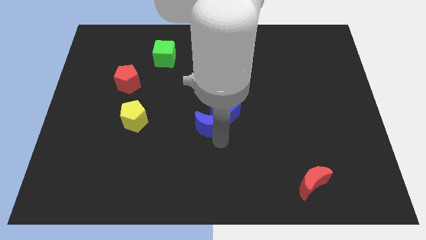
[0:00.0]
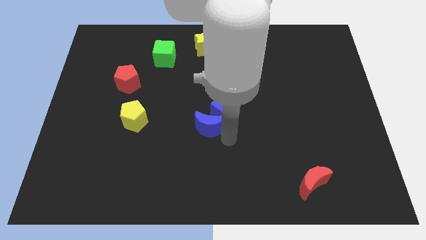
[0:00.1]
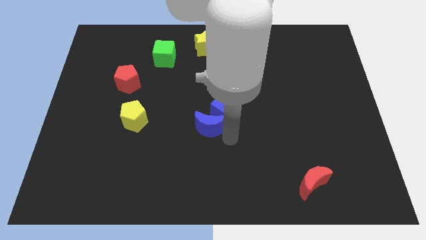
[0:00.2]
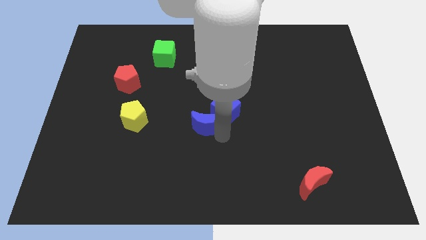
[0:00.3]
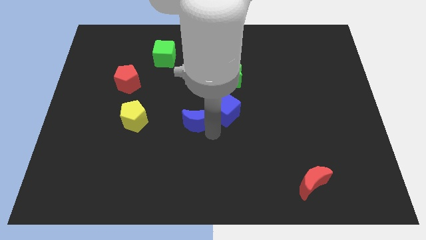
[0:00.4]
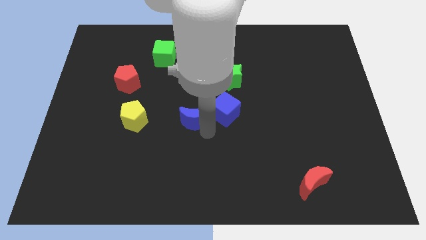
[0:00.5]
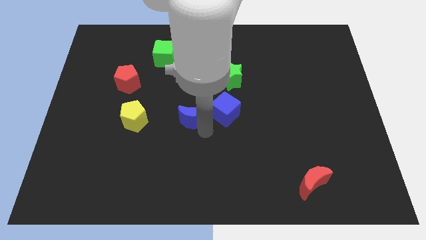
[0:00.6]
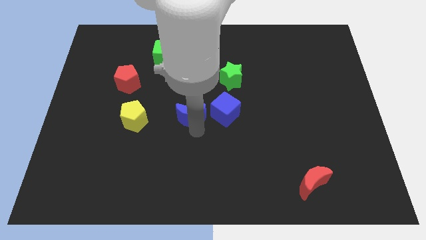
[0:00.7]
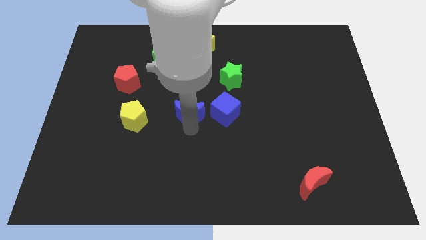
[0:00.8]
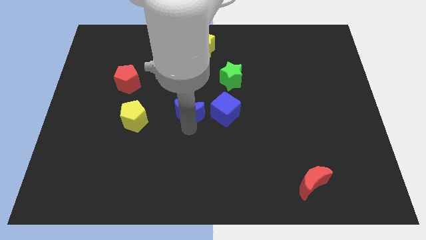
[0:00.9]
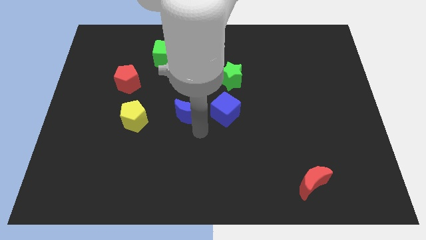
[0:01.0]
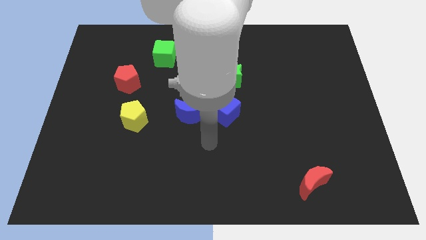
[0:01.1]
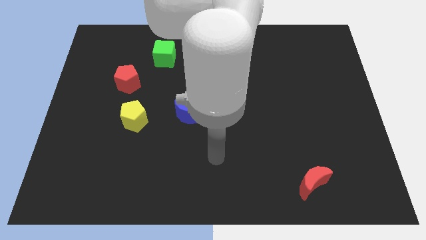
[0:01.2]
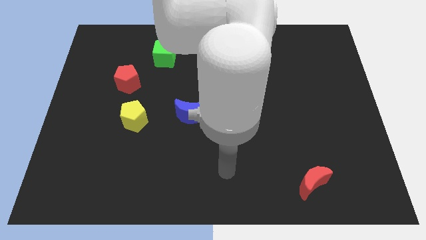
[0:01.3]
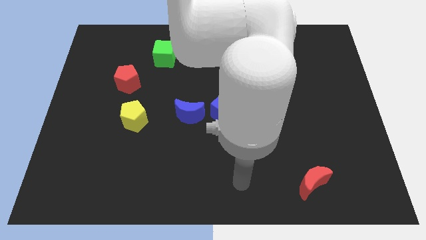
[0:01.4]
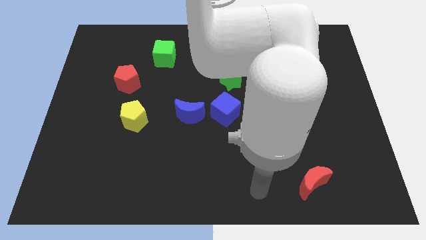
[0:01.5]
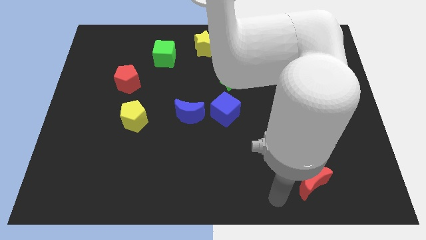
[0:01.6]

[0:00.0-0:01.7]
drag the blue moon left to the blue cube

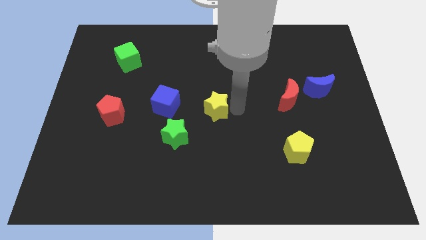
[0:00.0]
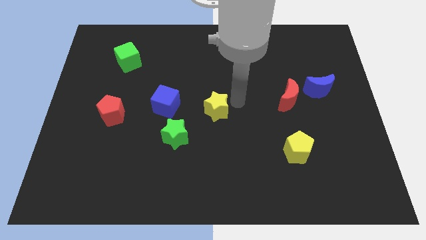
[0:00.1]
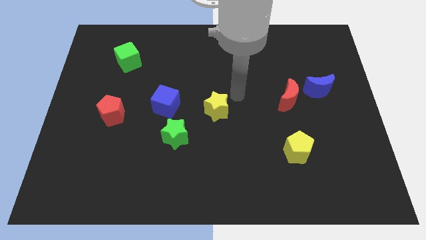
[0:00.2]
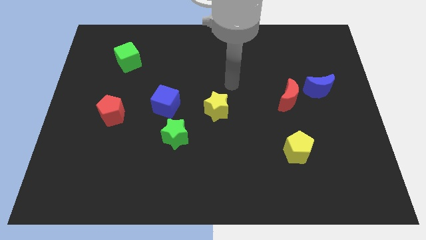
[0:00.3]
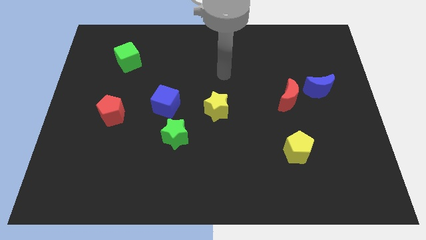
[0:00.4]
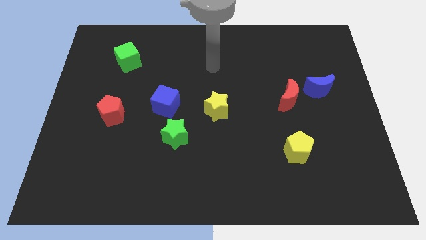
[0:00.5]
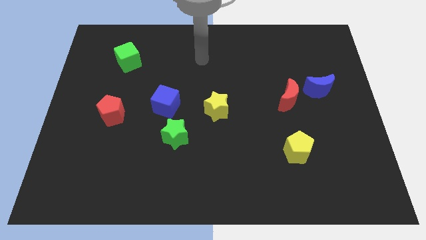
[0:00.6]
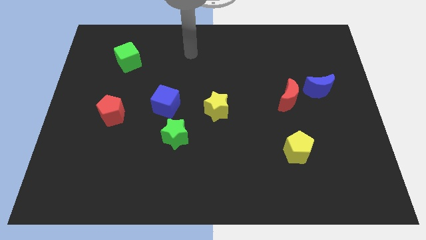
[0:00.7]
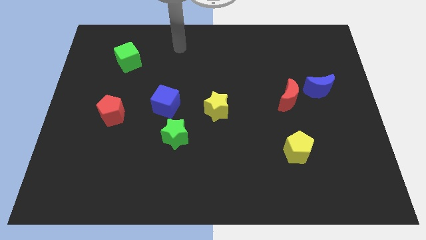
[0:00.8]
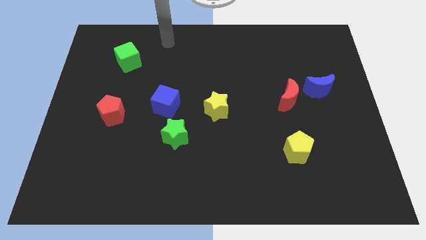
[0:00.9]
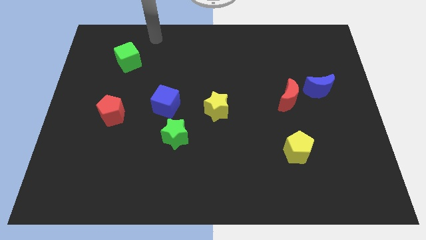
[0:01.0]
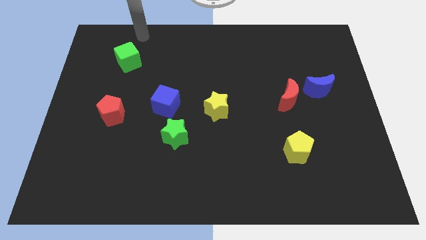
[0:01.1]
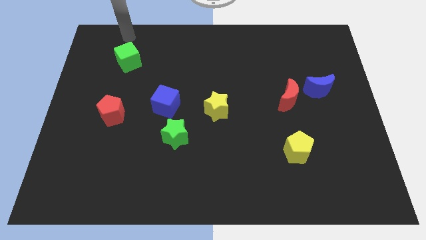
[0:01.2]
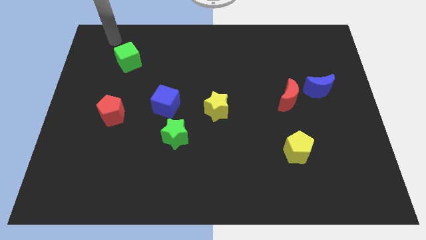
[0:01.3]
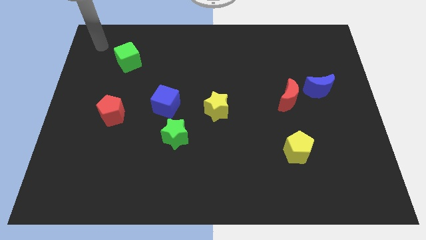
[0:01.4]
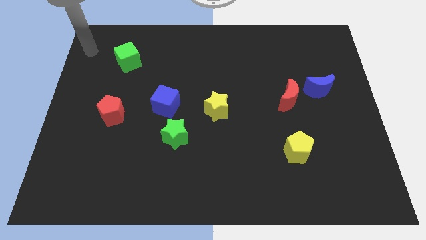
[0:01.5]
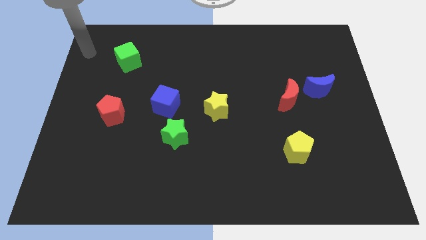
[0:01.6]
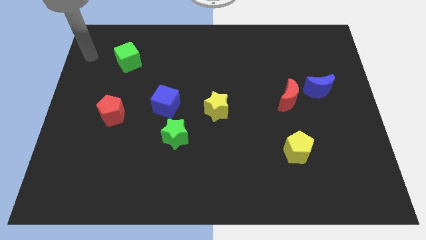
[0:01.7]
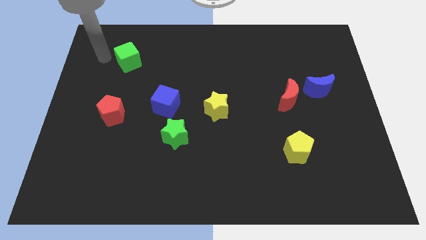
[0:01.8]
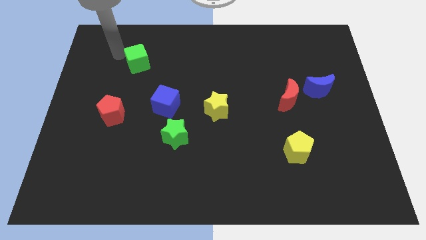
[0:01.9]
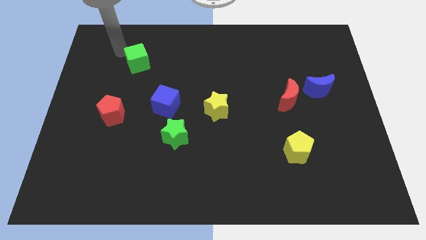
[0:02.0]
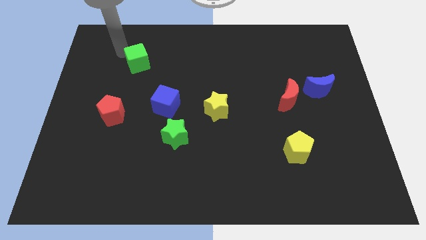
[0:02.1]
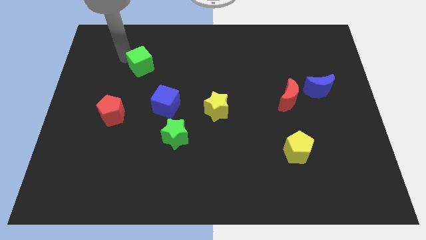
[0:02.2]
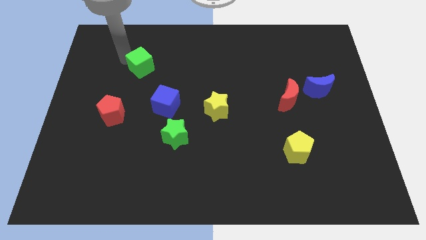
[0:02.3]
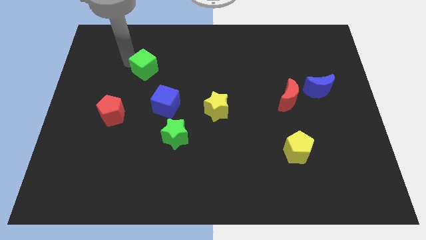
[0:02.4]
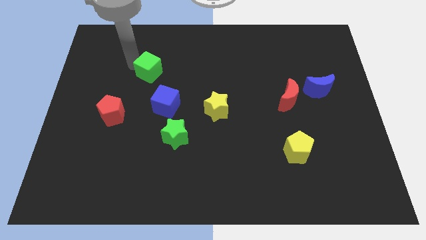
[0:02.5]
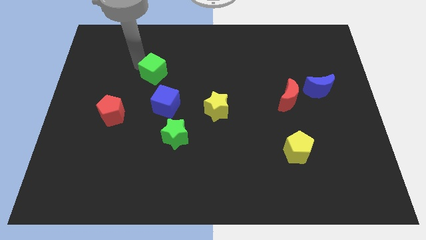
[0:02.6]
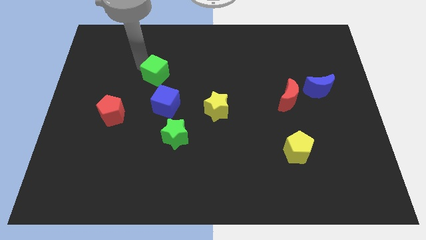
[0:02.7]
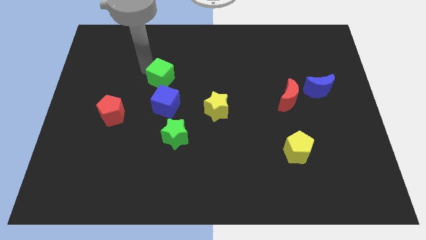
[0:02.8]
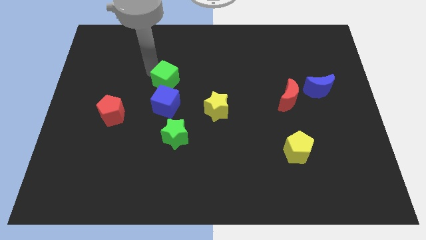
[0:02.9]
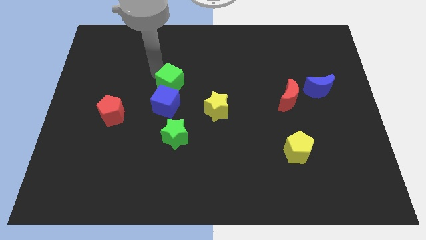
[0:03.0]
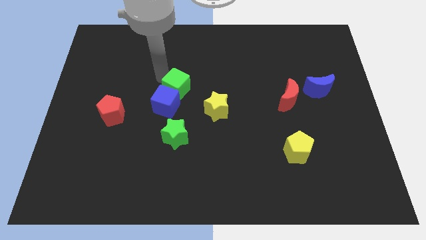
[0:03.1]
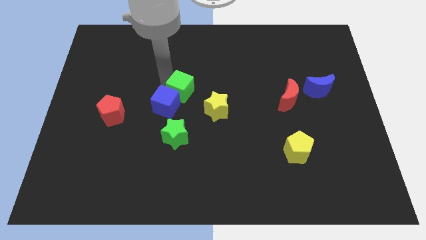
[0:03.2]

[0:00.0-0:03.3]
place green cube diagonally top right to the yellow star

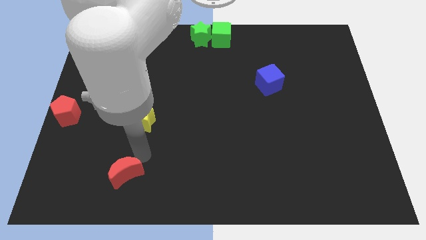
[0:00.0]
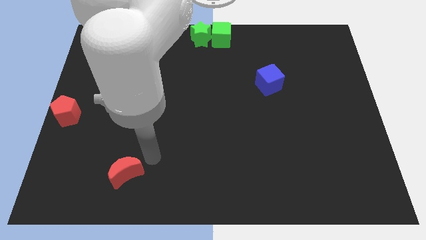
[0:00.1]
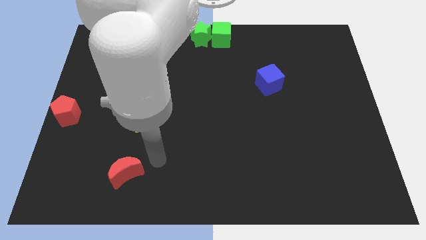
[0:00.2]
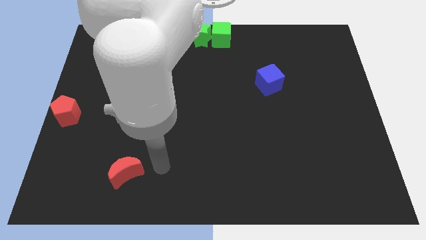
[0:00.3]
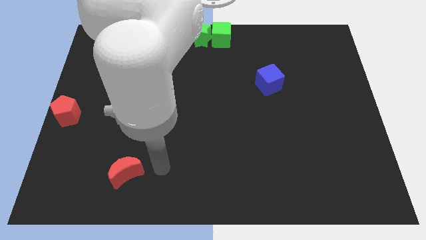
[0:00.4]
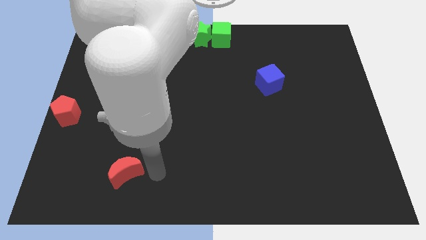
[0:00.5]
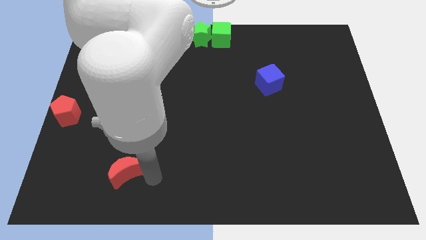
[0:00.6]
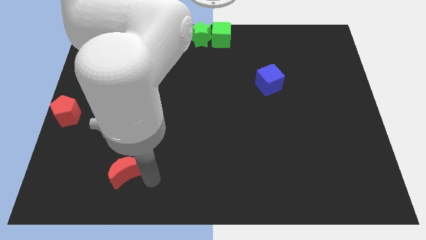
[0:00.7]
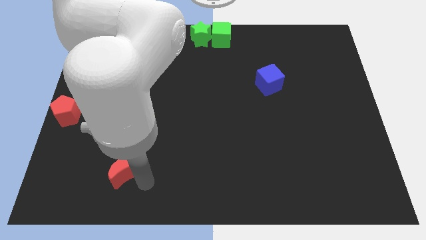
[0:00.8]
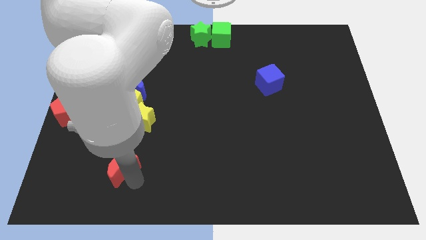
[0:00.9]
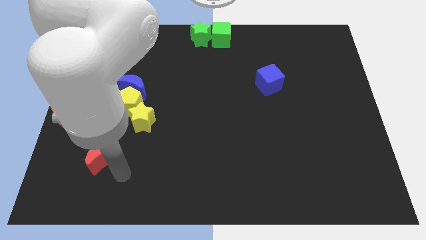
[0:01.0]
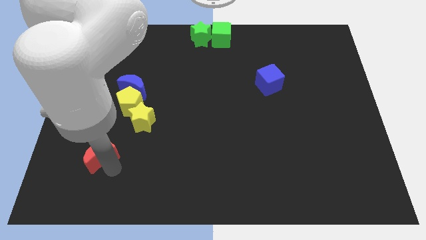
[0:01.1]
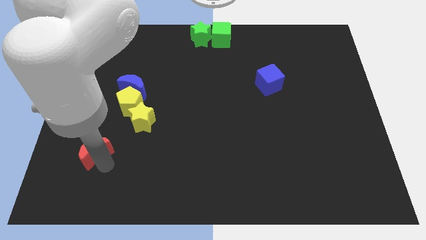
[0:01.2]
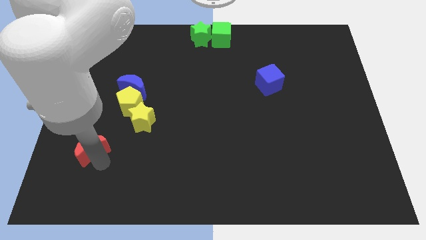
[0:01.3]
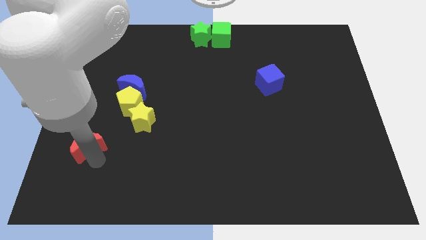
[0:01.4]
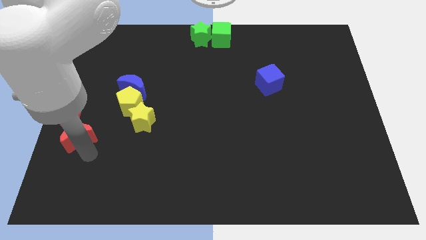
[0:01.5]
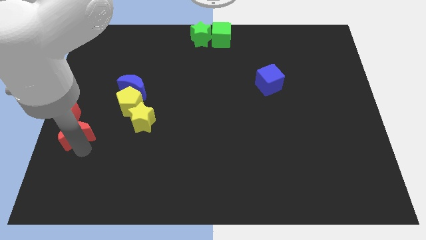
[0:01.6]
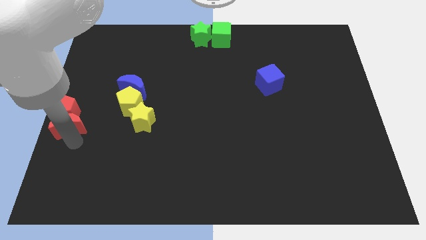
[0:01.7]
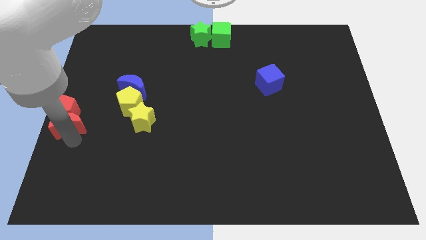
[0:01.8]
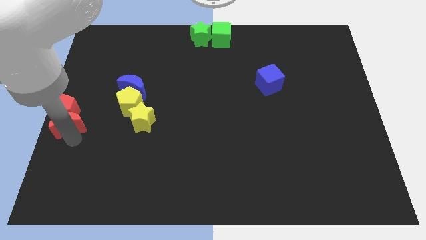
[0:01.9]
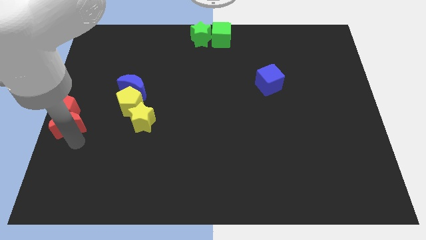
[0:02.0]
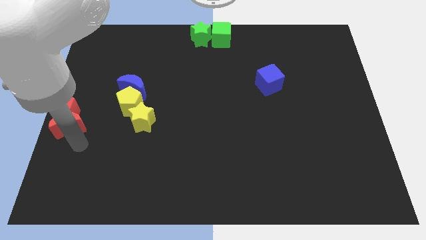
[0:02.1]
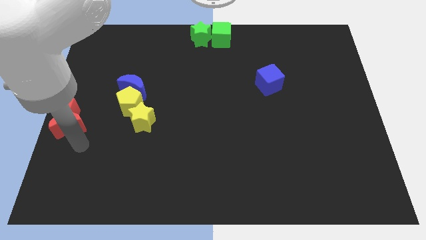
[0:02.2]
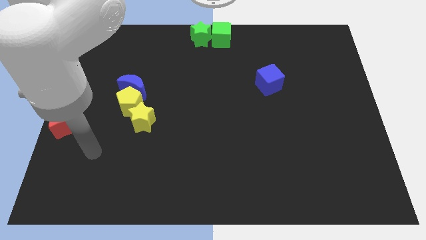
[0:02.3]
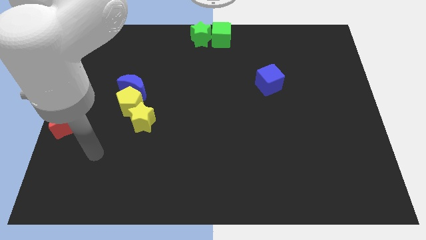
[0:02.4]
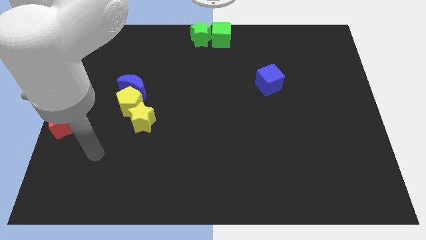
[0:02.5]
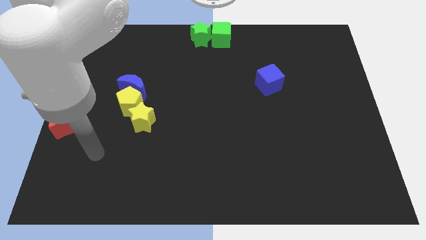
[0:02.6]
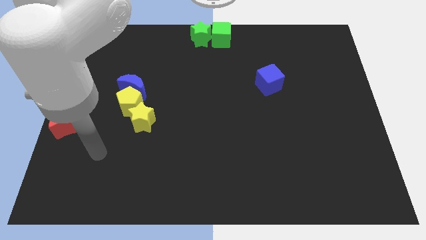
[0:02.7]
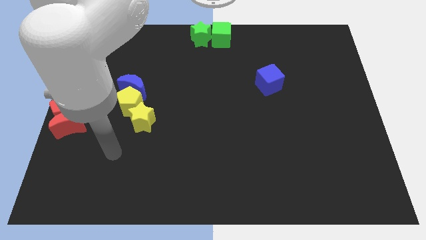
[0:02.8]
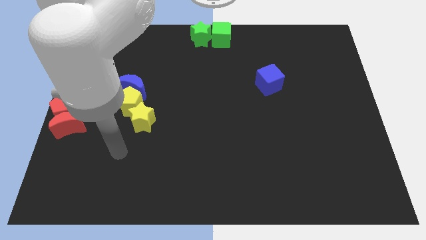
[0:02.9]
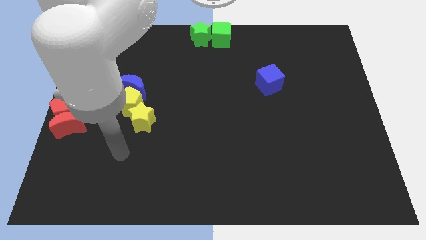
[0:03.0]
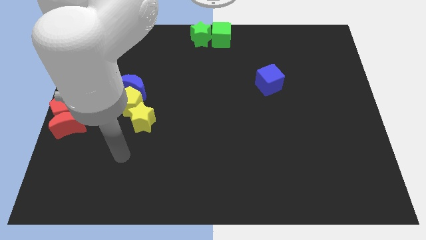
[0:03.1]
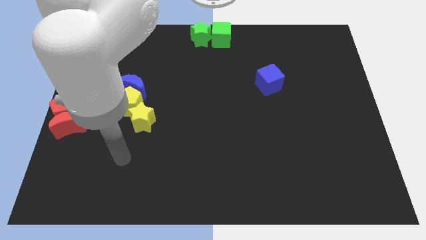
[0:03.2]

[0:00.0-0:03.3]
move the red moon under the red pentagon

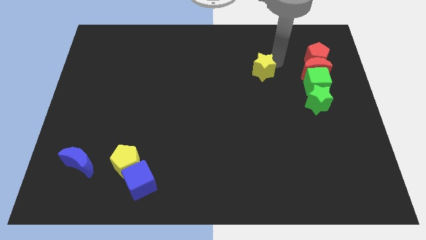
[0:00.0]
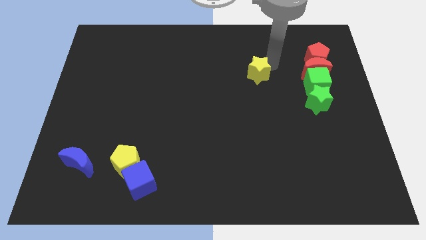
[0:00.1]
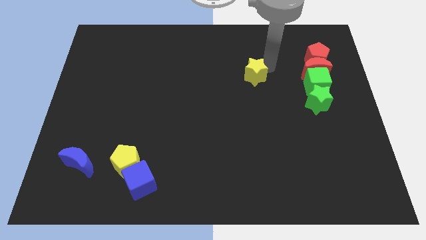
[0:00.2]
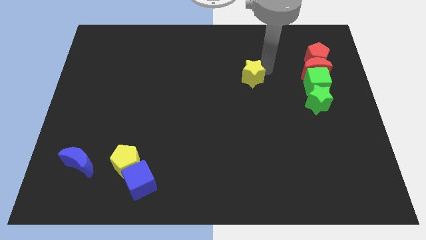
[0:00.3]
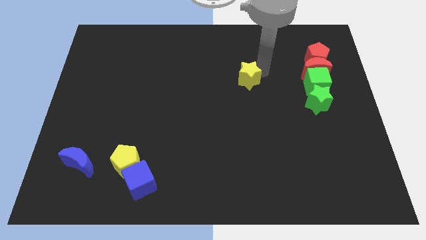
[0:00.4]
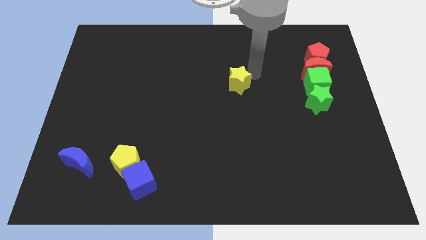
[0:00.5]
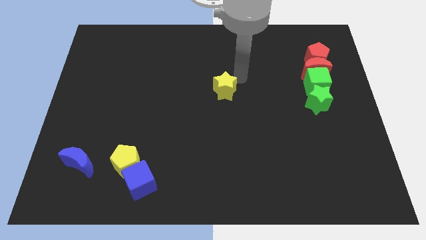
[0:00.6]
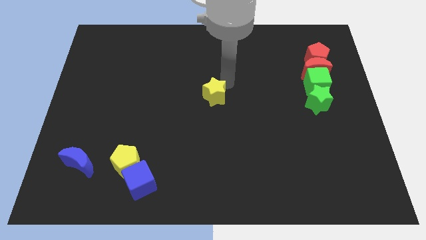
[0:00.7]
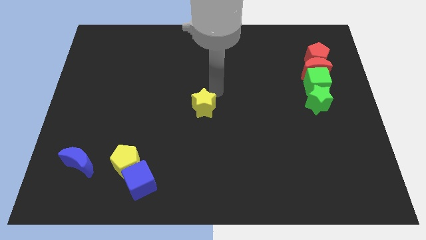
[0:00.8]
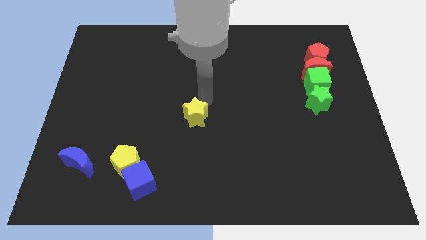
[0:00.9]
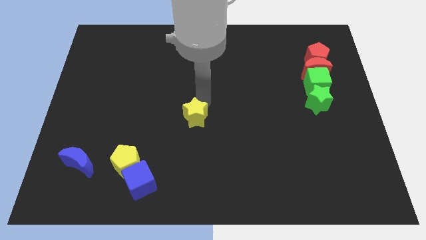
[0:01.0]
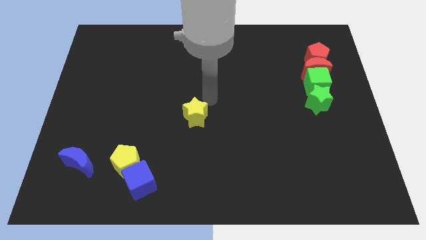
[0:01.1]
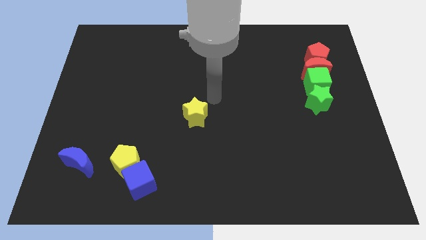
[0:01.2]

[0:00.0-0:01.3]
move the yellow star diagonal top right yellow pentagon
